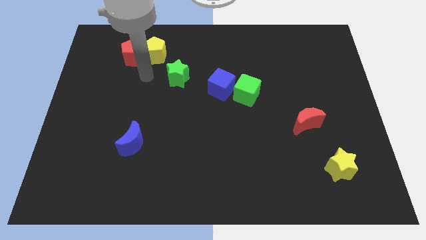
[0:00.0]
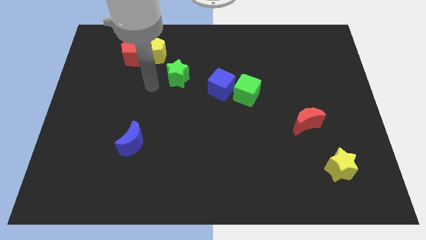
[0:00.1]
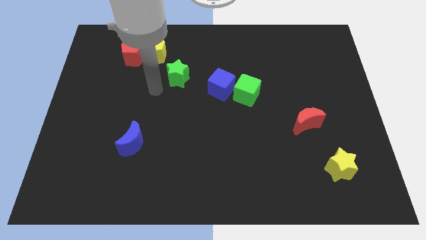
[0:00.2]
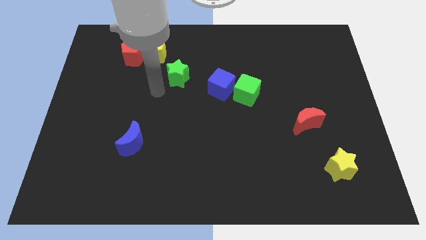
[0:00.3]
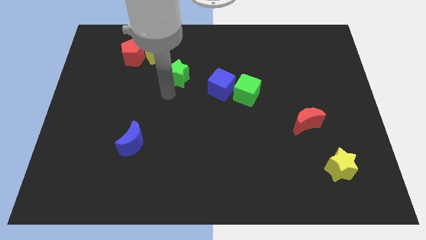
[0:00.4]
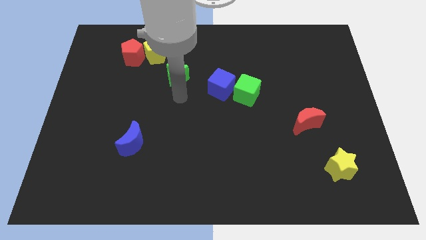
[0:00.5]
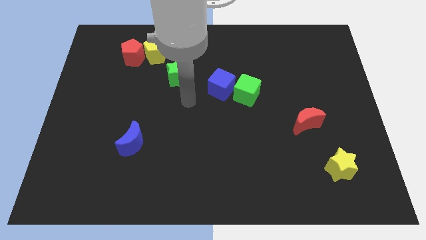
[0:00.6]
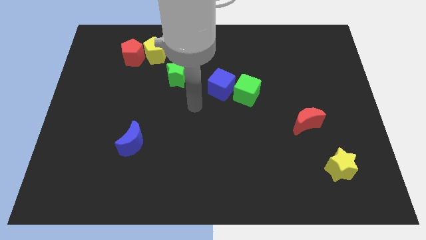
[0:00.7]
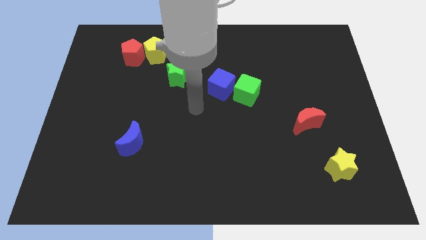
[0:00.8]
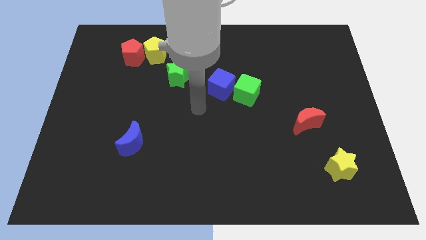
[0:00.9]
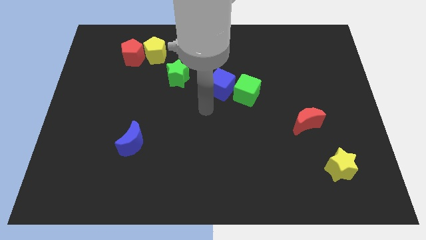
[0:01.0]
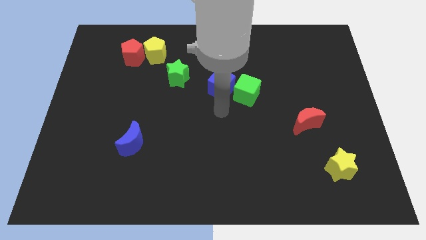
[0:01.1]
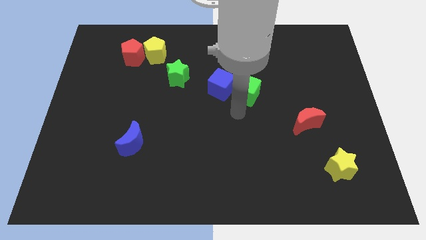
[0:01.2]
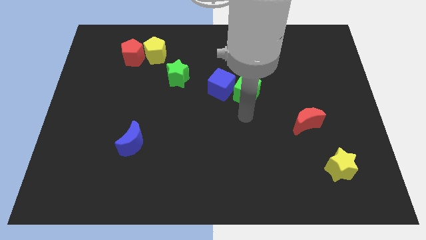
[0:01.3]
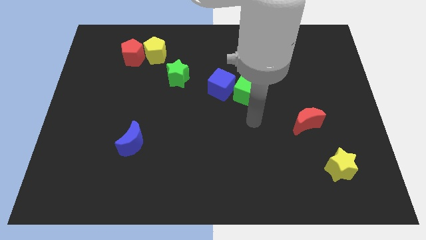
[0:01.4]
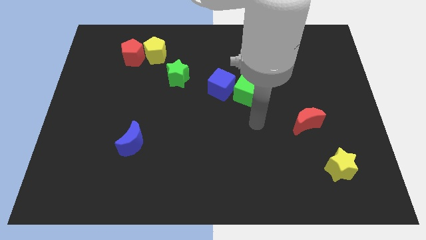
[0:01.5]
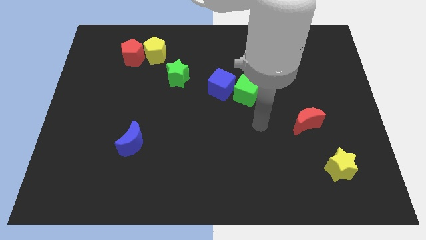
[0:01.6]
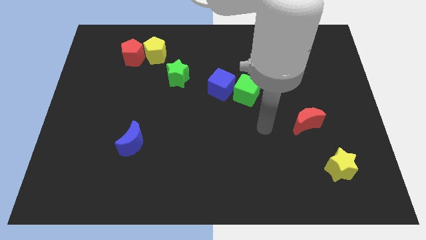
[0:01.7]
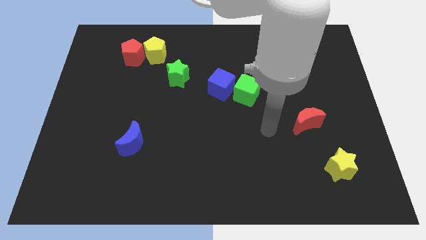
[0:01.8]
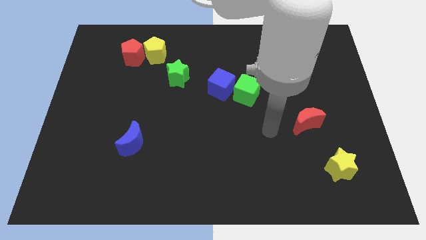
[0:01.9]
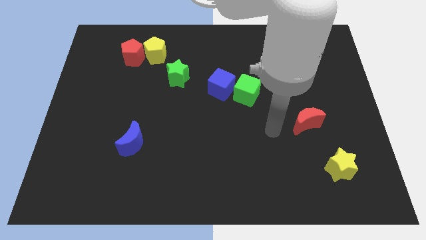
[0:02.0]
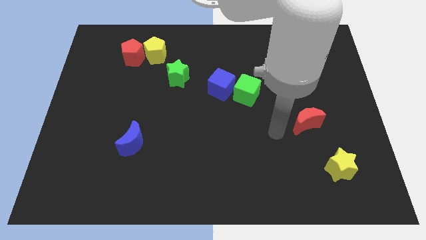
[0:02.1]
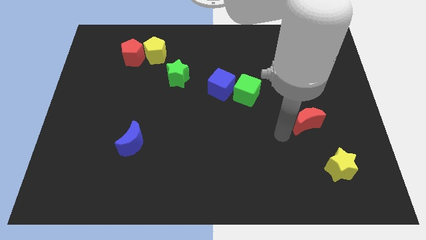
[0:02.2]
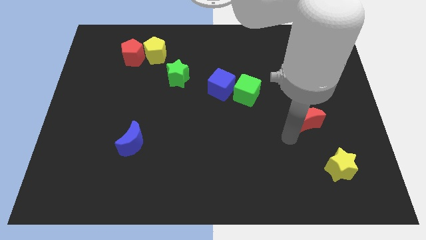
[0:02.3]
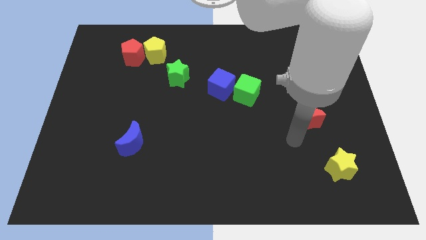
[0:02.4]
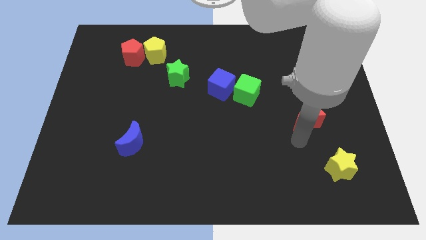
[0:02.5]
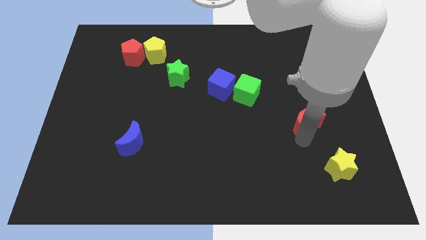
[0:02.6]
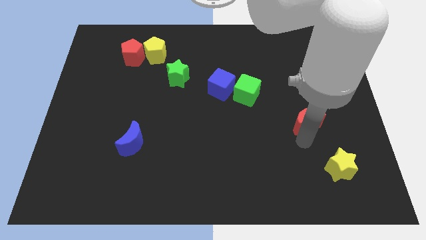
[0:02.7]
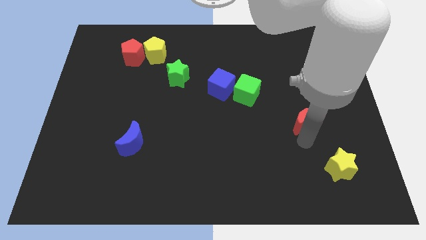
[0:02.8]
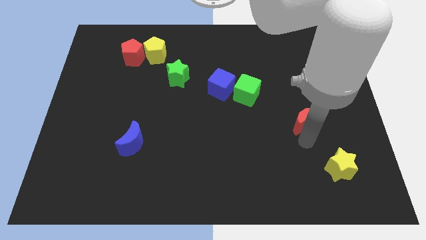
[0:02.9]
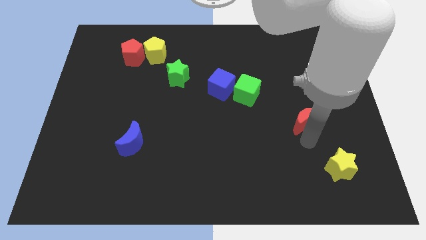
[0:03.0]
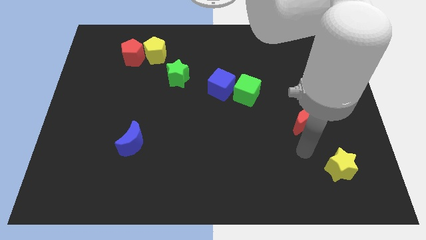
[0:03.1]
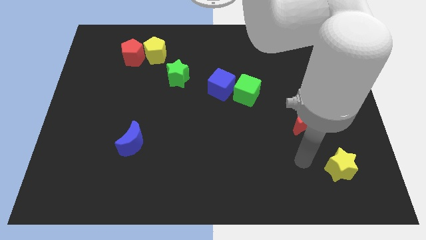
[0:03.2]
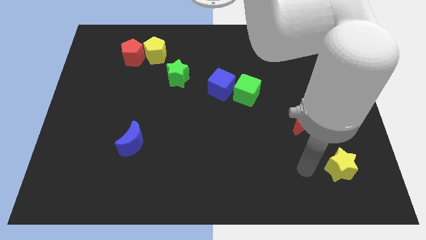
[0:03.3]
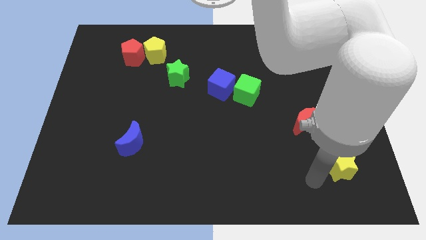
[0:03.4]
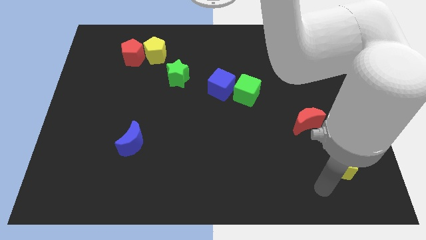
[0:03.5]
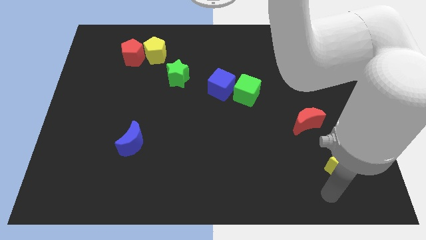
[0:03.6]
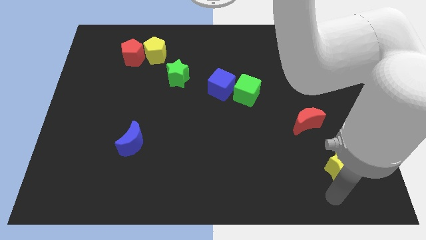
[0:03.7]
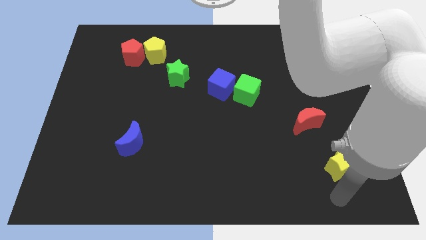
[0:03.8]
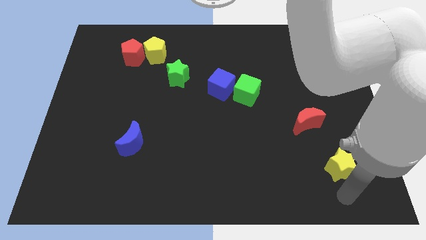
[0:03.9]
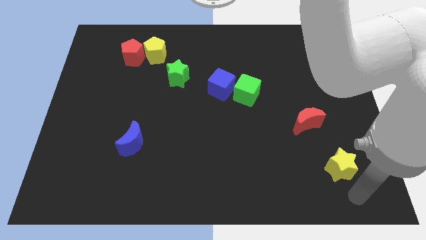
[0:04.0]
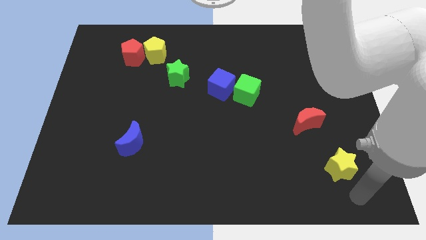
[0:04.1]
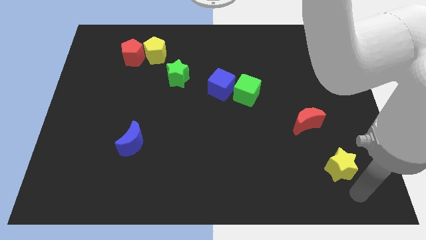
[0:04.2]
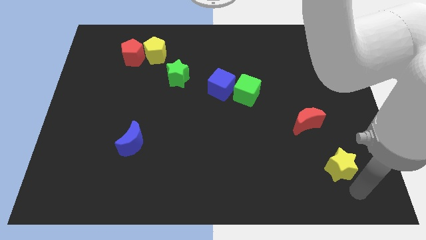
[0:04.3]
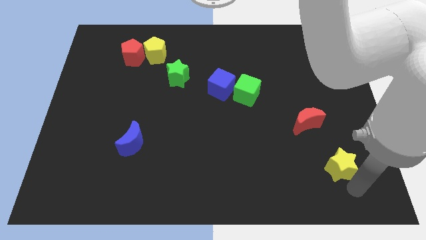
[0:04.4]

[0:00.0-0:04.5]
move your arm and point below yellow star

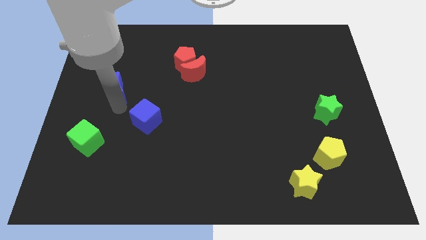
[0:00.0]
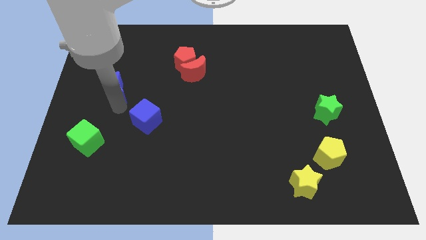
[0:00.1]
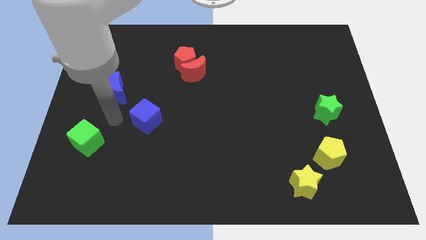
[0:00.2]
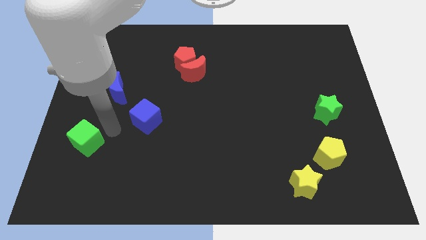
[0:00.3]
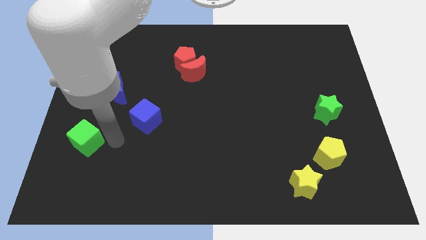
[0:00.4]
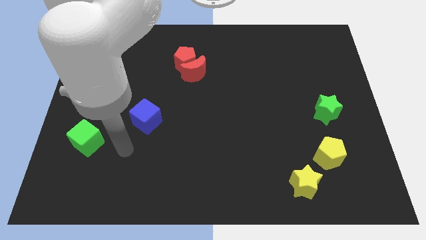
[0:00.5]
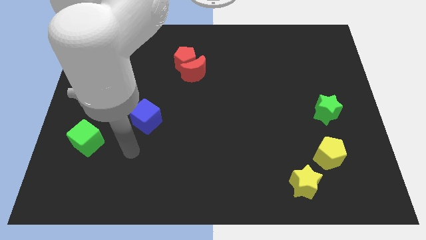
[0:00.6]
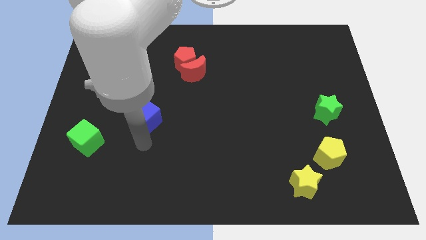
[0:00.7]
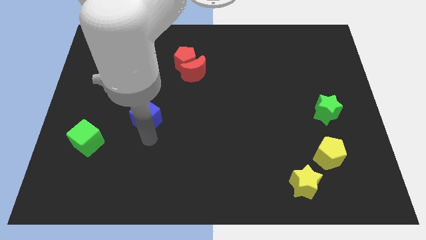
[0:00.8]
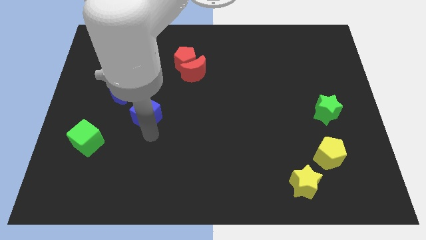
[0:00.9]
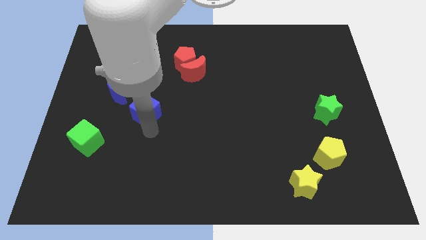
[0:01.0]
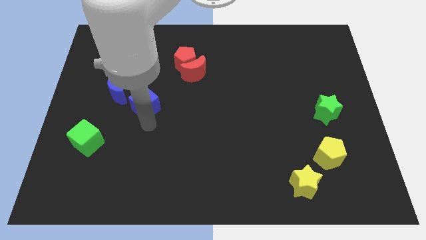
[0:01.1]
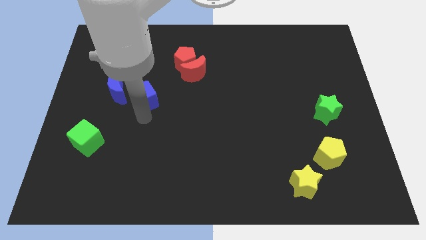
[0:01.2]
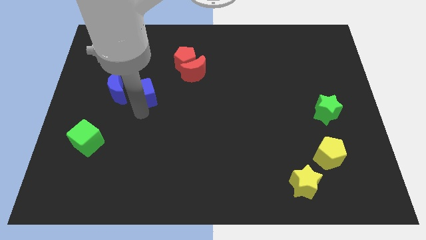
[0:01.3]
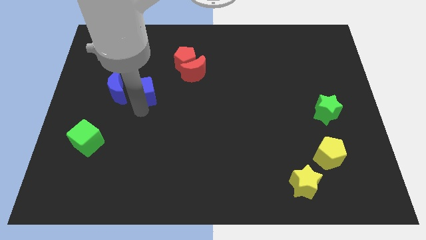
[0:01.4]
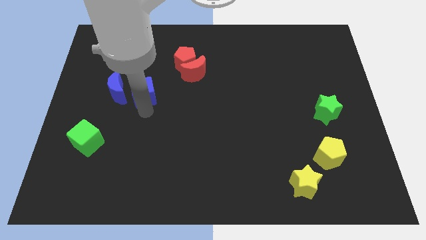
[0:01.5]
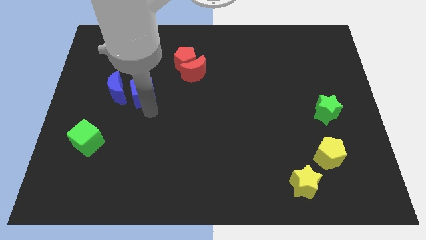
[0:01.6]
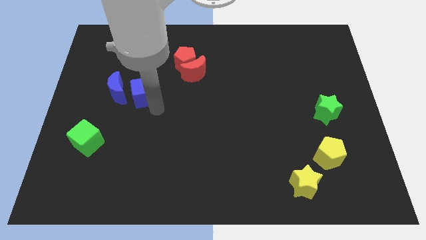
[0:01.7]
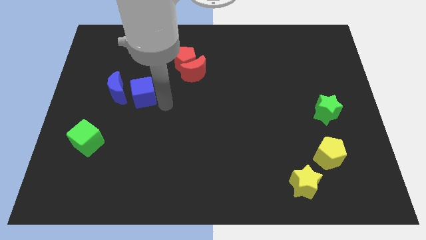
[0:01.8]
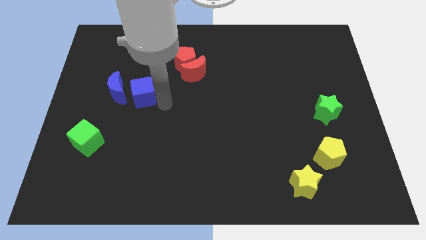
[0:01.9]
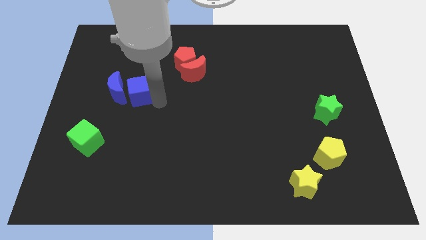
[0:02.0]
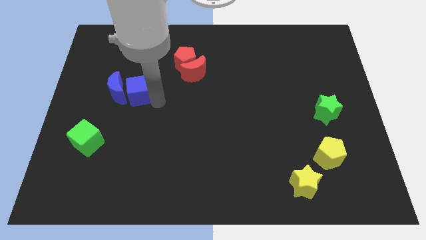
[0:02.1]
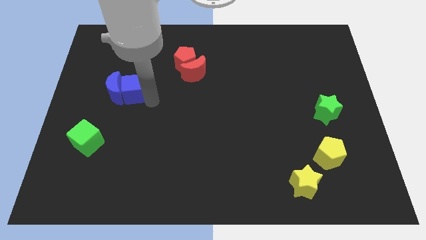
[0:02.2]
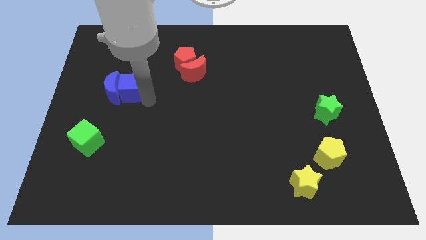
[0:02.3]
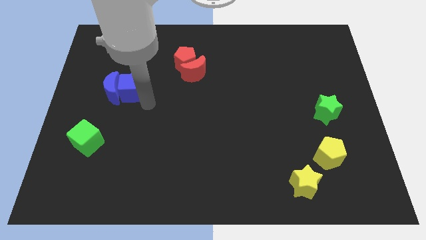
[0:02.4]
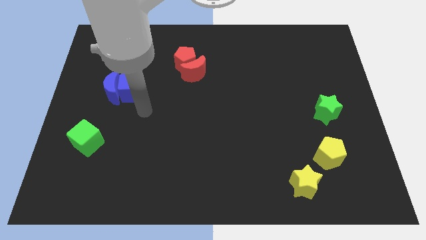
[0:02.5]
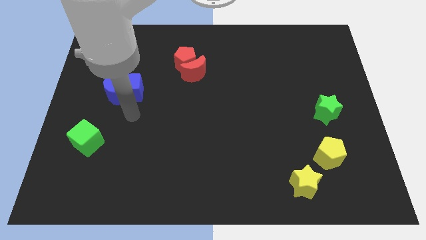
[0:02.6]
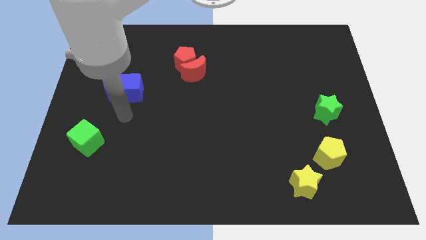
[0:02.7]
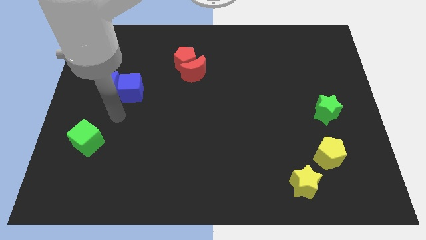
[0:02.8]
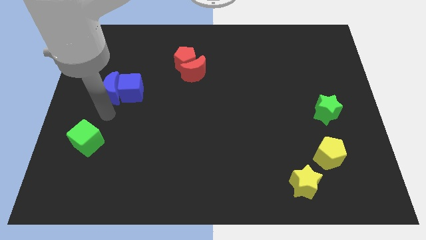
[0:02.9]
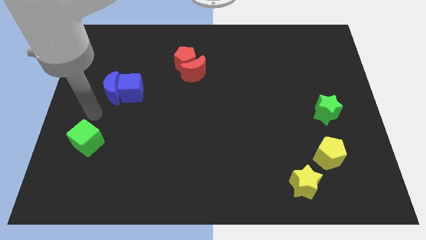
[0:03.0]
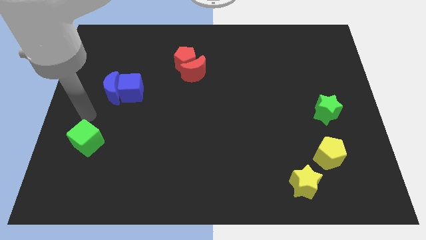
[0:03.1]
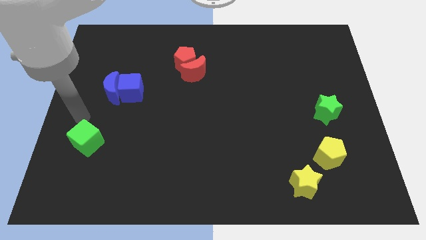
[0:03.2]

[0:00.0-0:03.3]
move blue cube slightly upwards

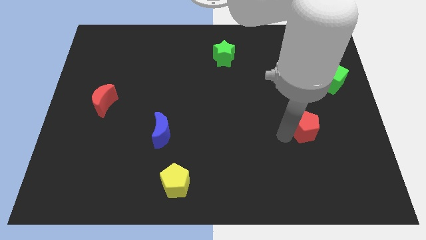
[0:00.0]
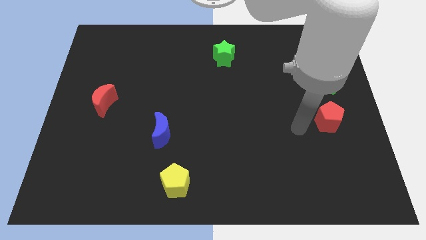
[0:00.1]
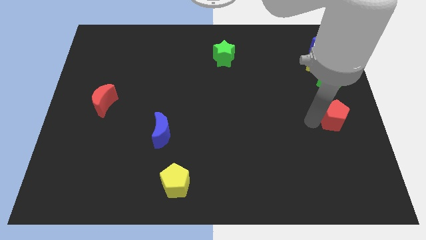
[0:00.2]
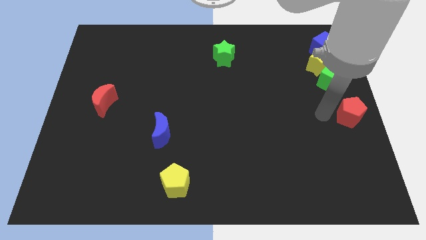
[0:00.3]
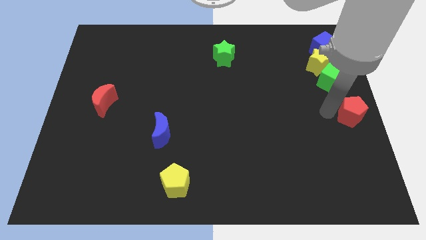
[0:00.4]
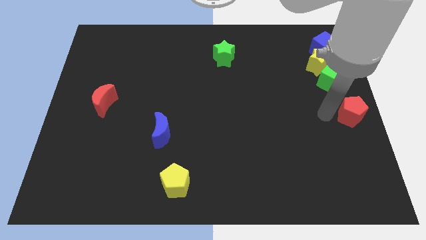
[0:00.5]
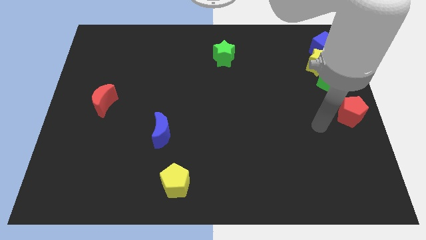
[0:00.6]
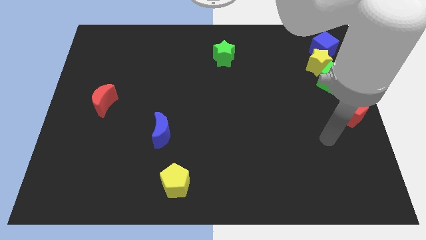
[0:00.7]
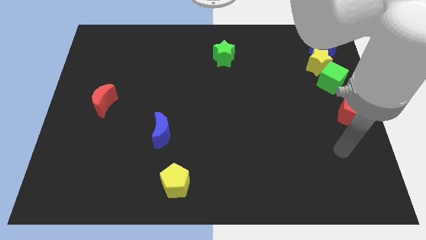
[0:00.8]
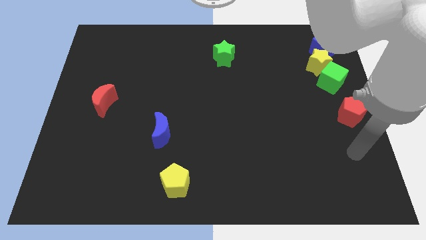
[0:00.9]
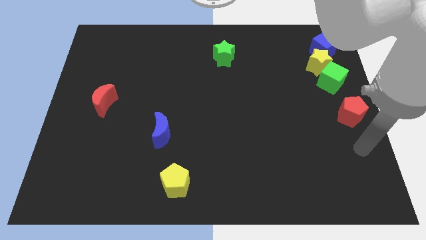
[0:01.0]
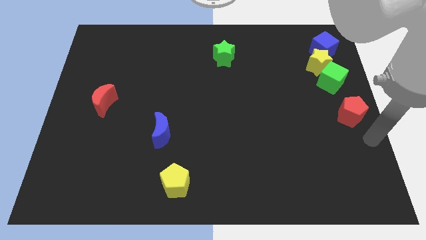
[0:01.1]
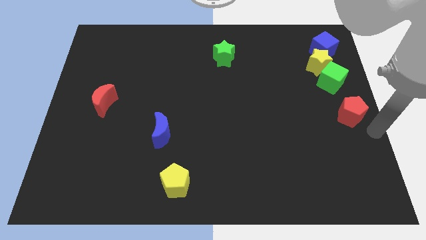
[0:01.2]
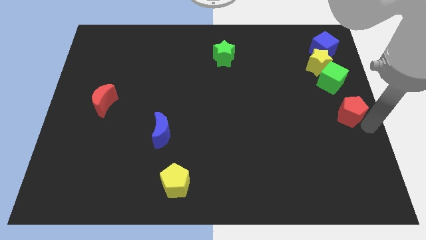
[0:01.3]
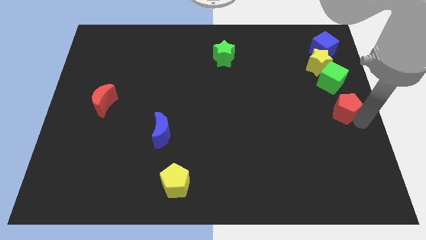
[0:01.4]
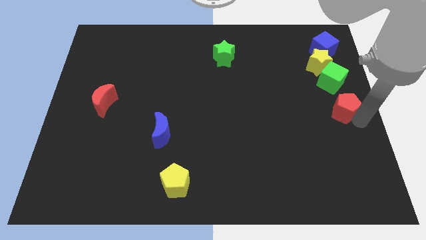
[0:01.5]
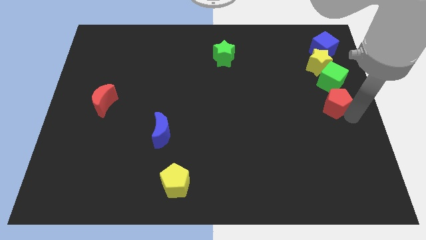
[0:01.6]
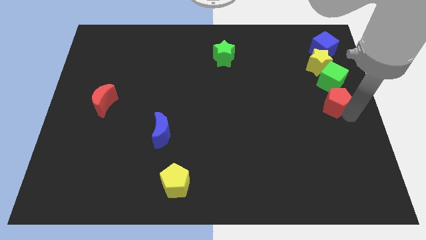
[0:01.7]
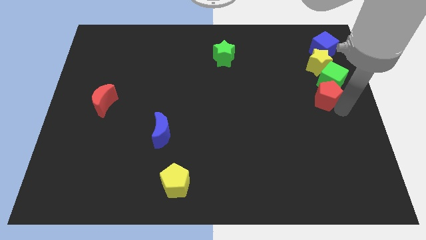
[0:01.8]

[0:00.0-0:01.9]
drag the red pentagon and place it below the green cube
